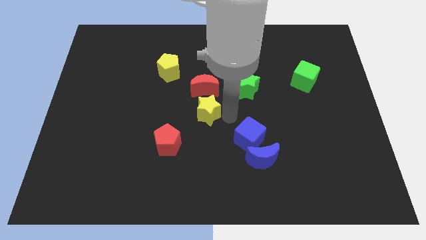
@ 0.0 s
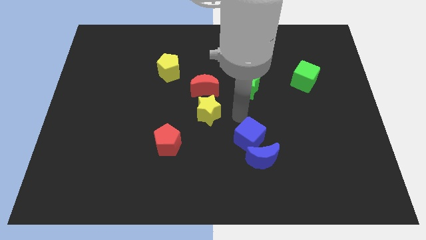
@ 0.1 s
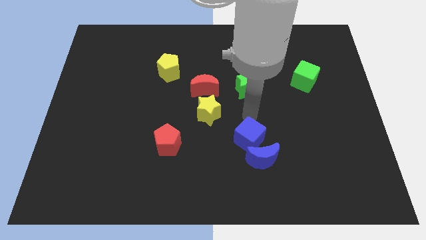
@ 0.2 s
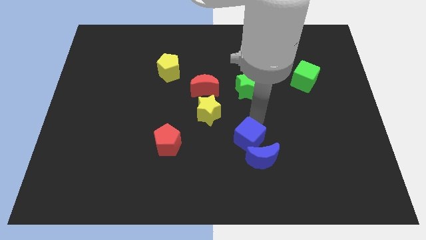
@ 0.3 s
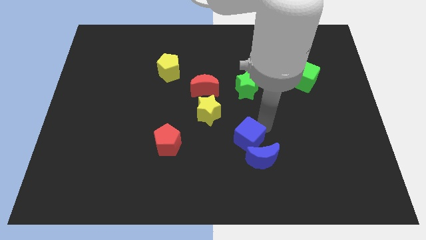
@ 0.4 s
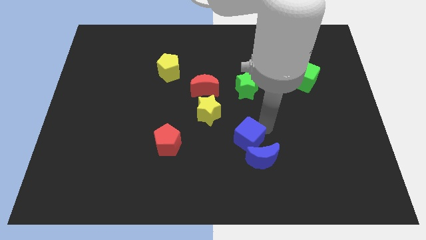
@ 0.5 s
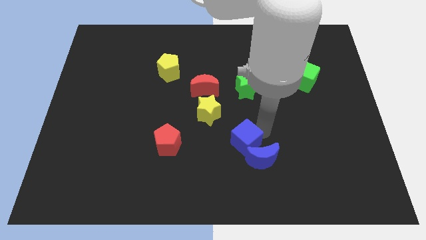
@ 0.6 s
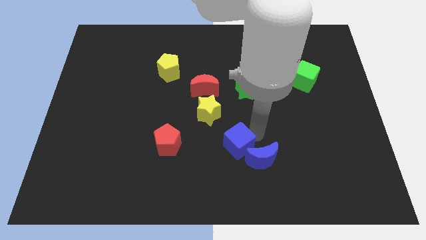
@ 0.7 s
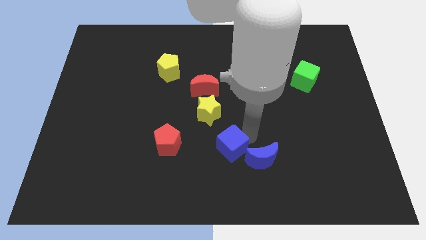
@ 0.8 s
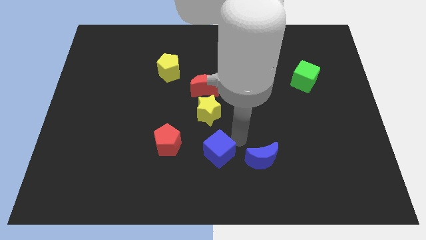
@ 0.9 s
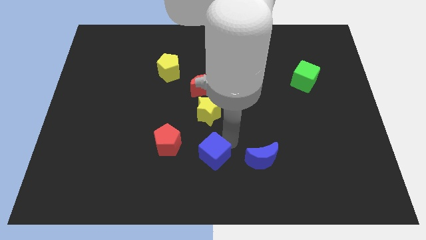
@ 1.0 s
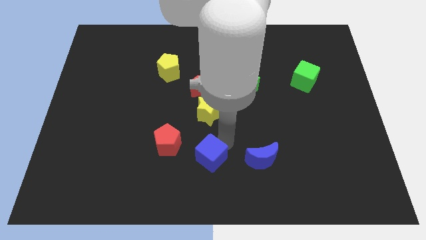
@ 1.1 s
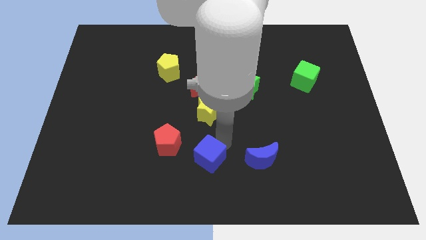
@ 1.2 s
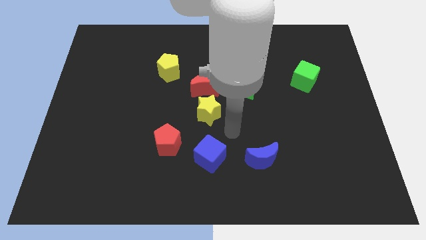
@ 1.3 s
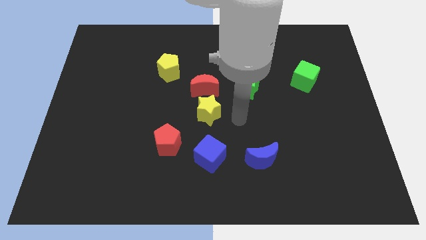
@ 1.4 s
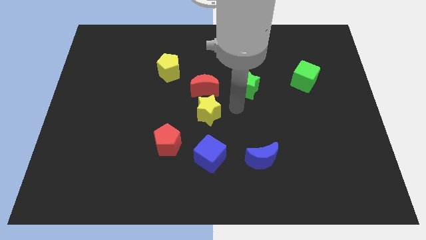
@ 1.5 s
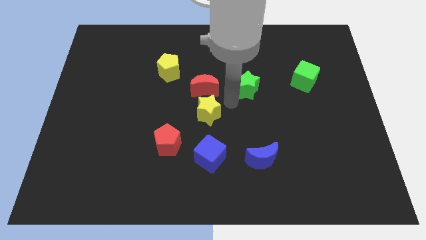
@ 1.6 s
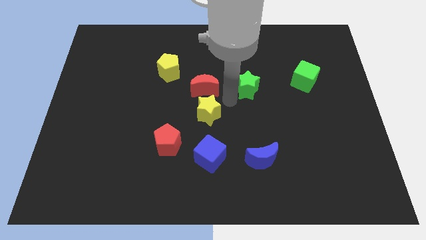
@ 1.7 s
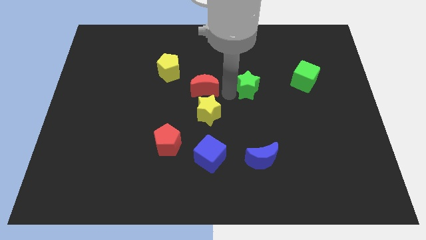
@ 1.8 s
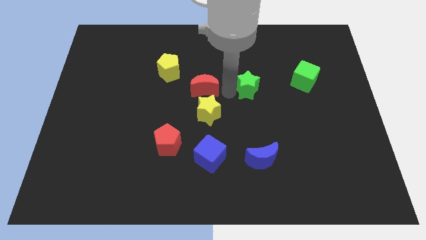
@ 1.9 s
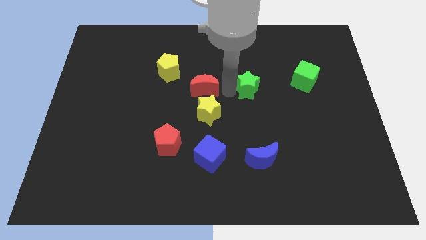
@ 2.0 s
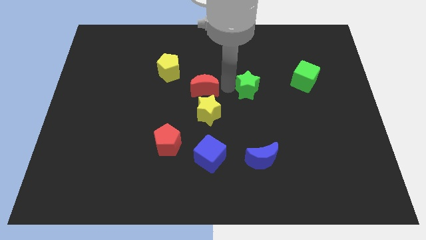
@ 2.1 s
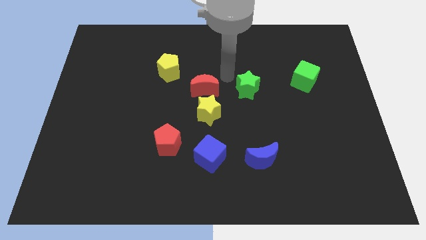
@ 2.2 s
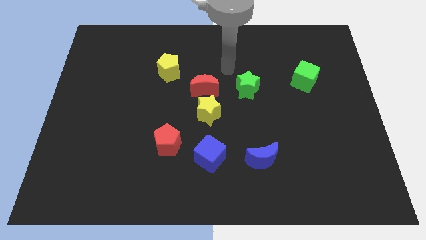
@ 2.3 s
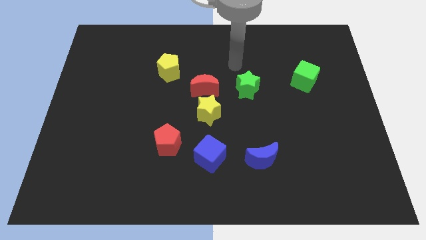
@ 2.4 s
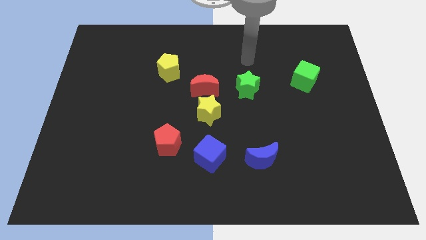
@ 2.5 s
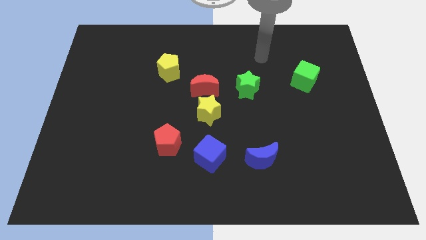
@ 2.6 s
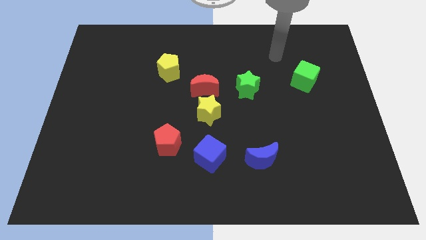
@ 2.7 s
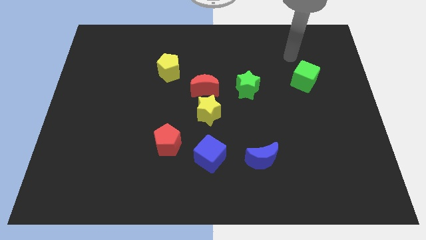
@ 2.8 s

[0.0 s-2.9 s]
move the blue cube to the bottom of the yellow star

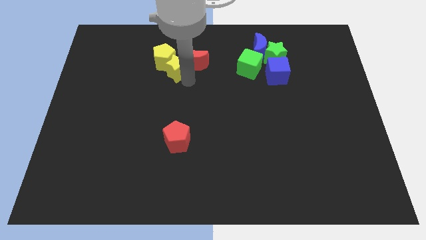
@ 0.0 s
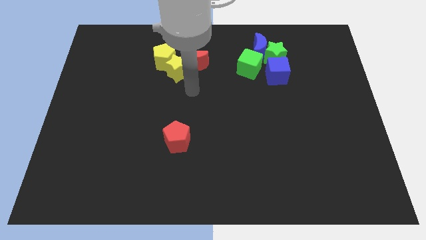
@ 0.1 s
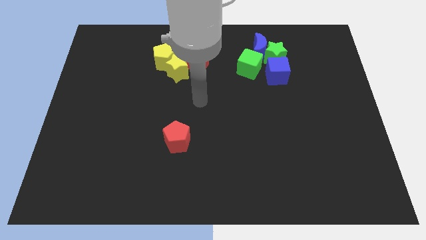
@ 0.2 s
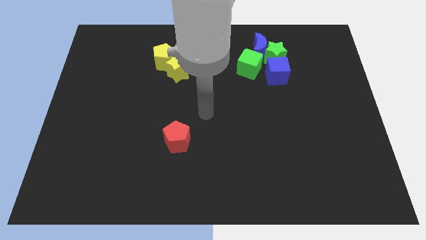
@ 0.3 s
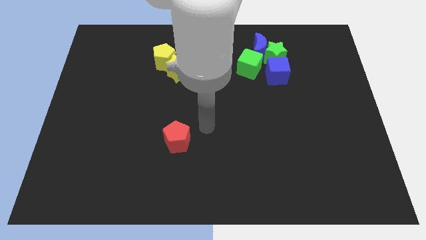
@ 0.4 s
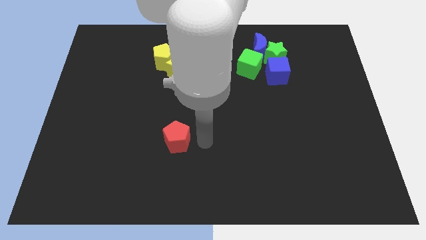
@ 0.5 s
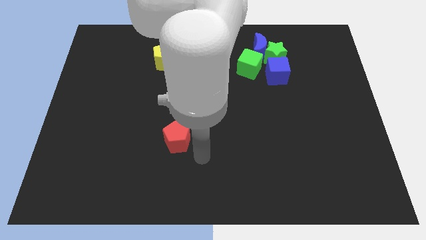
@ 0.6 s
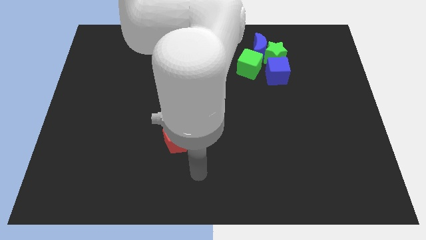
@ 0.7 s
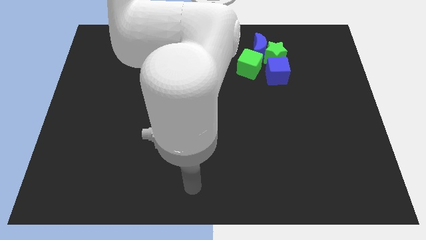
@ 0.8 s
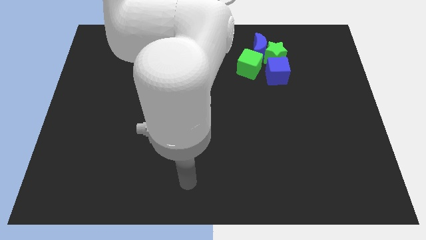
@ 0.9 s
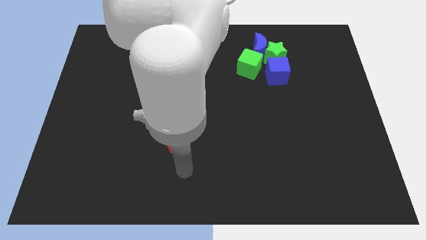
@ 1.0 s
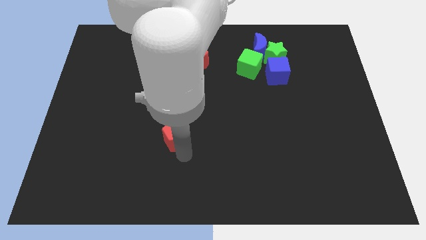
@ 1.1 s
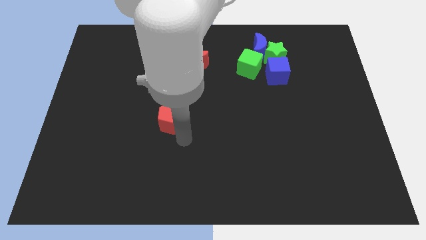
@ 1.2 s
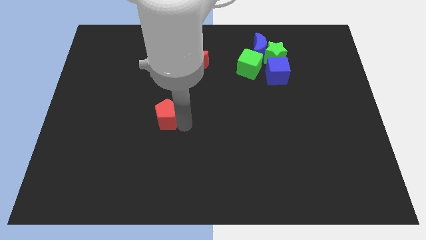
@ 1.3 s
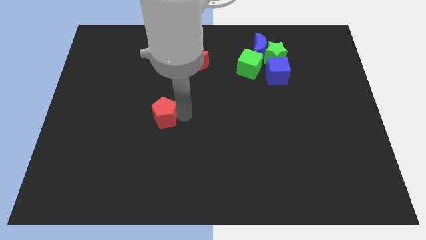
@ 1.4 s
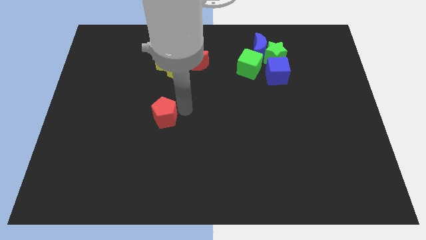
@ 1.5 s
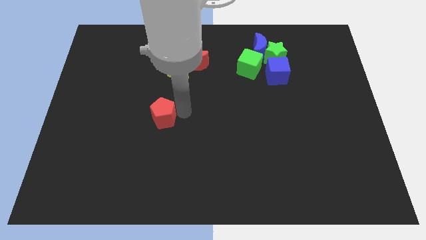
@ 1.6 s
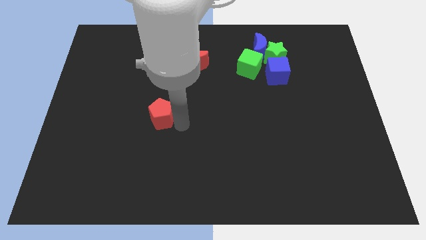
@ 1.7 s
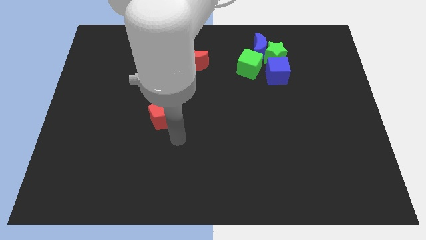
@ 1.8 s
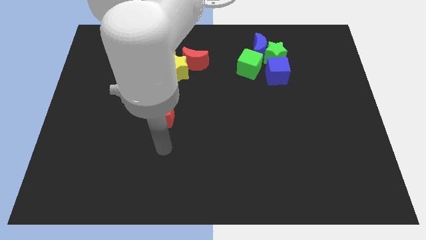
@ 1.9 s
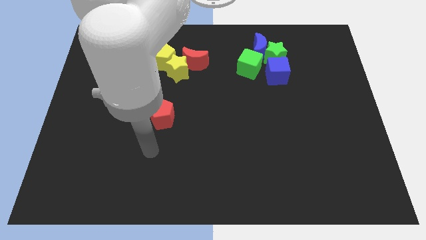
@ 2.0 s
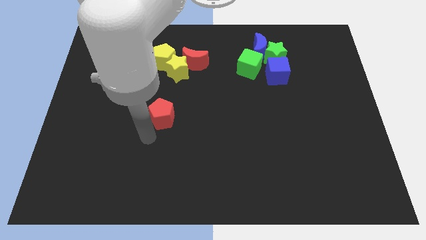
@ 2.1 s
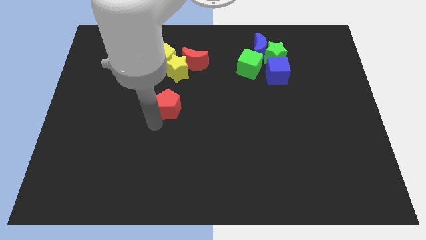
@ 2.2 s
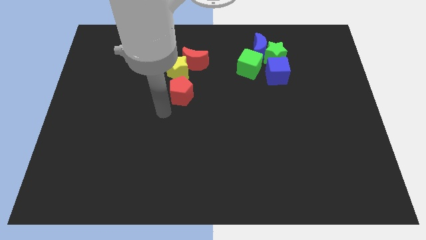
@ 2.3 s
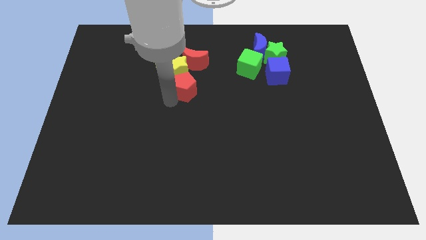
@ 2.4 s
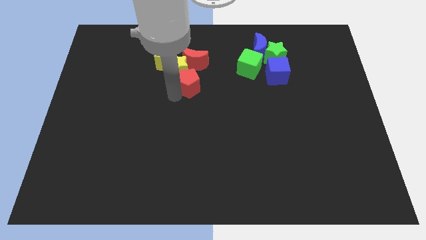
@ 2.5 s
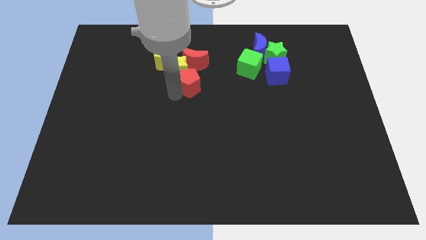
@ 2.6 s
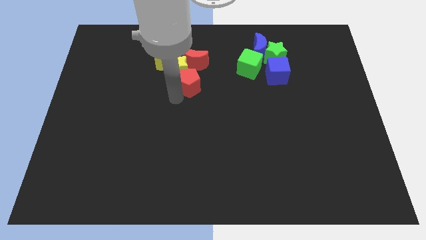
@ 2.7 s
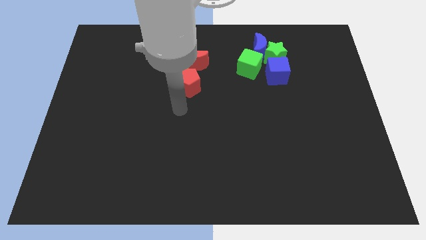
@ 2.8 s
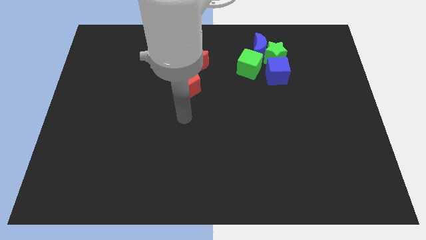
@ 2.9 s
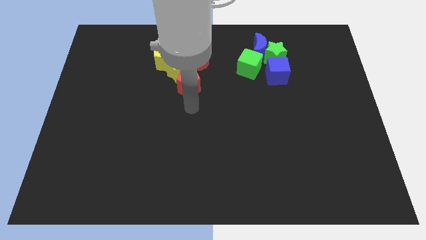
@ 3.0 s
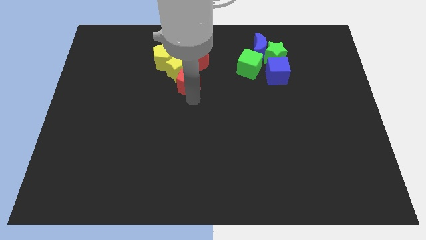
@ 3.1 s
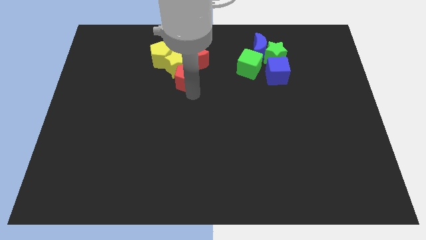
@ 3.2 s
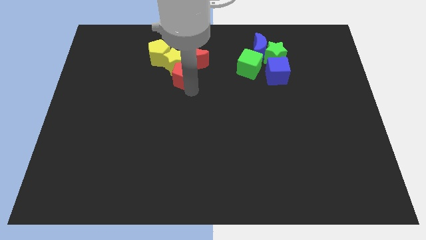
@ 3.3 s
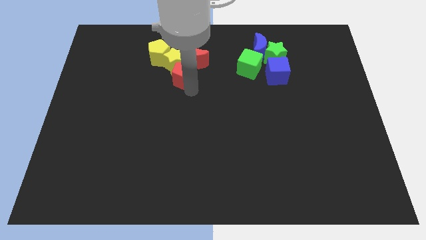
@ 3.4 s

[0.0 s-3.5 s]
push the red pentagon into the yellow star

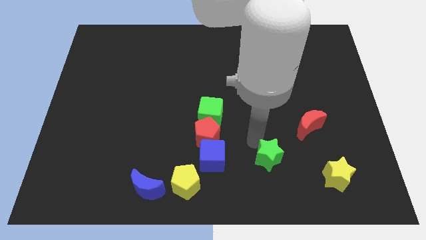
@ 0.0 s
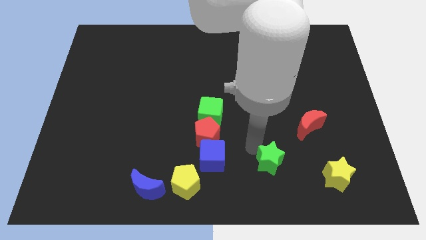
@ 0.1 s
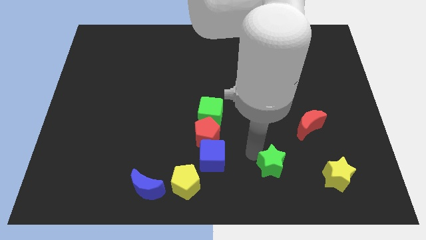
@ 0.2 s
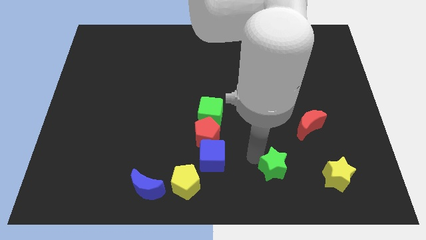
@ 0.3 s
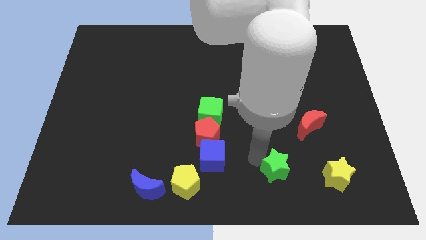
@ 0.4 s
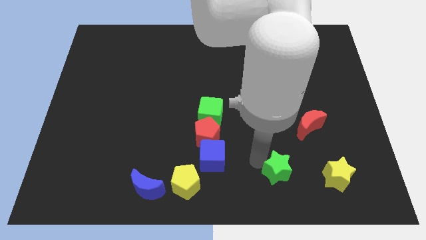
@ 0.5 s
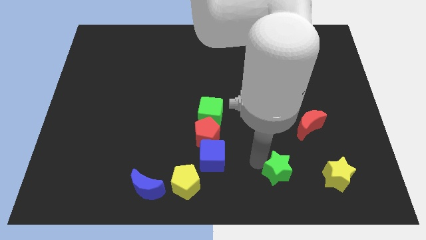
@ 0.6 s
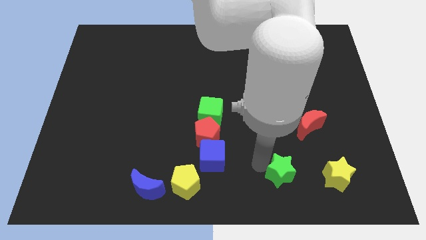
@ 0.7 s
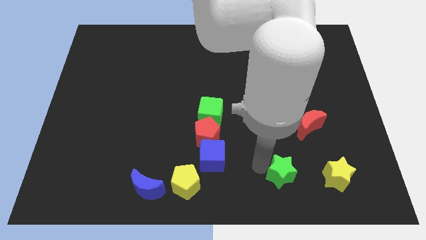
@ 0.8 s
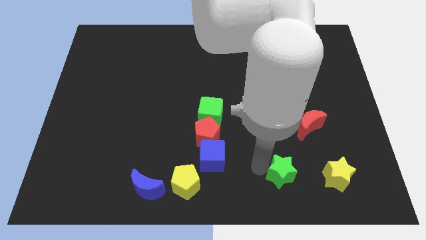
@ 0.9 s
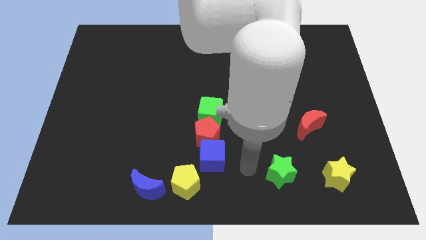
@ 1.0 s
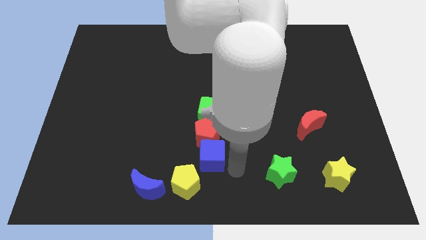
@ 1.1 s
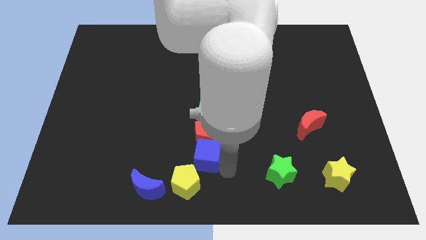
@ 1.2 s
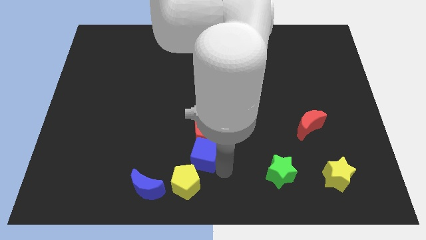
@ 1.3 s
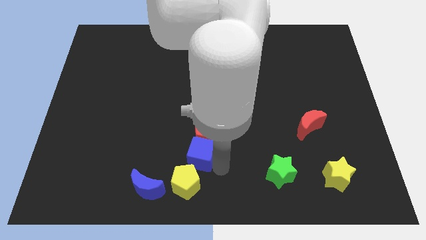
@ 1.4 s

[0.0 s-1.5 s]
push green star slightly downwards

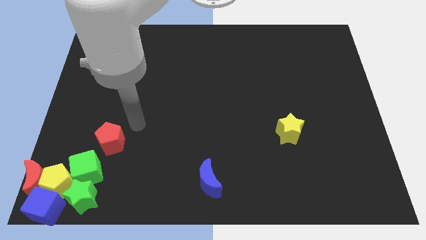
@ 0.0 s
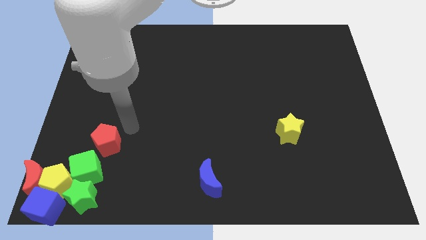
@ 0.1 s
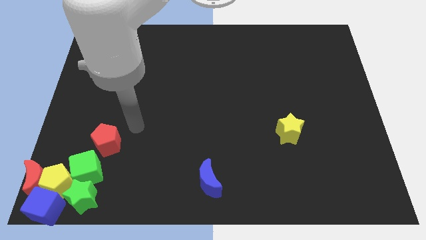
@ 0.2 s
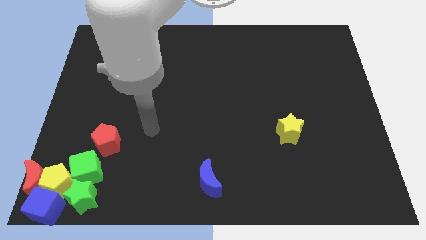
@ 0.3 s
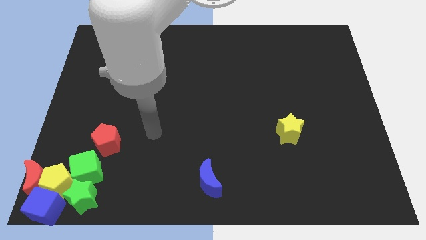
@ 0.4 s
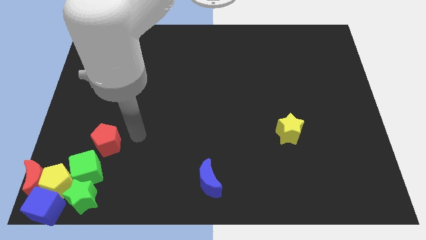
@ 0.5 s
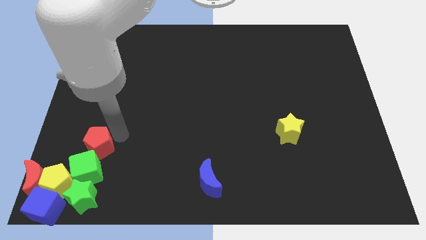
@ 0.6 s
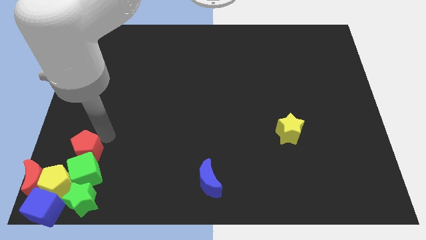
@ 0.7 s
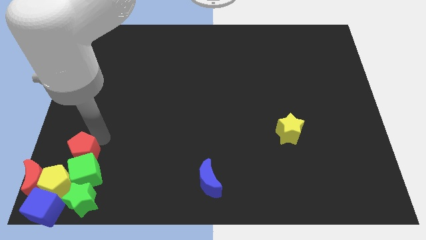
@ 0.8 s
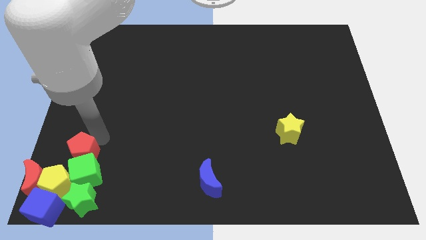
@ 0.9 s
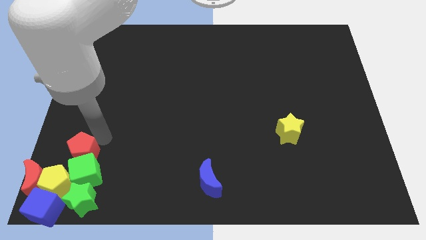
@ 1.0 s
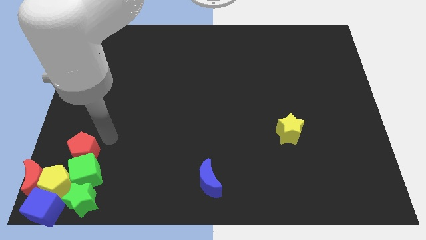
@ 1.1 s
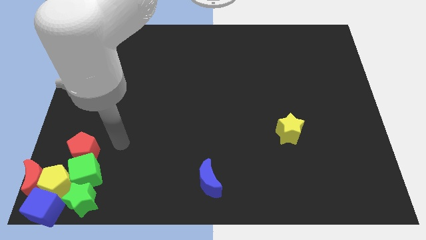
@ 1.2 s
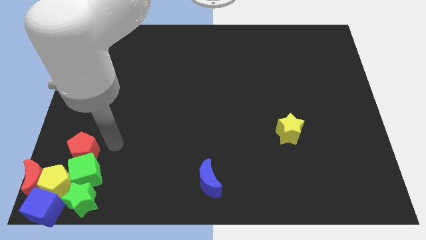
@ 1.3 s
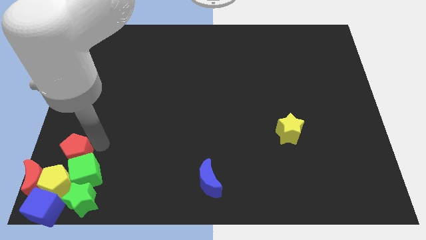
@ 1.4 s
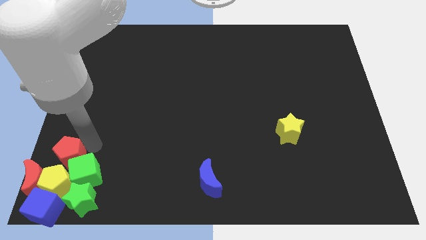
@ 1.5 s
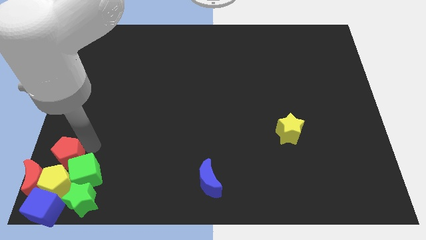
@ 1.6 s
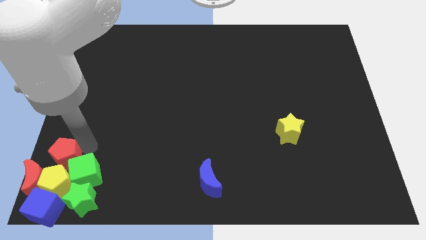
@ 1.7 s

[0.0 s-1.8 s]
push the red pentagon top to the yellow pentagon
